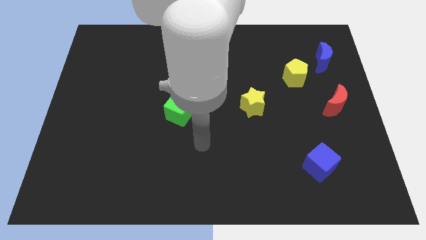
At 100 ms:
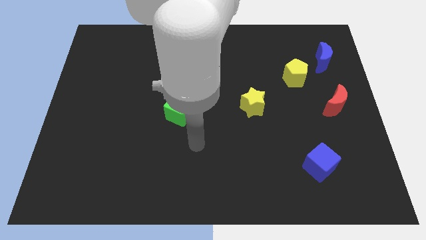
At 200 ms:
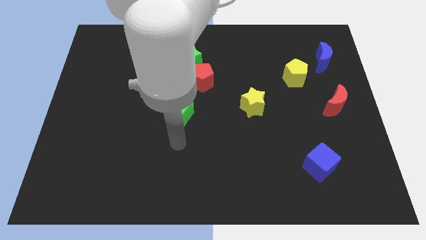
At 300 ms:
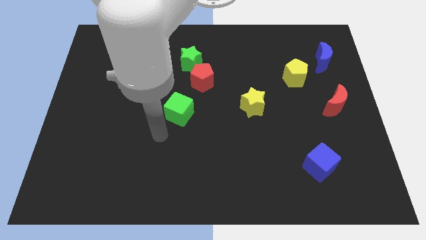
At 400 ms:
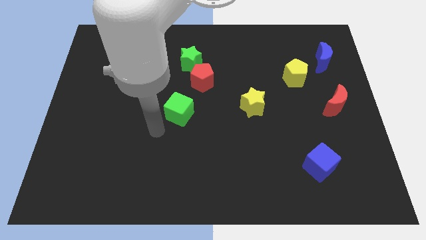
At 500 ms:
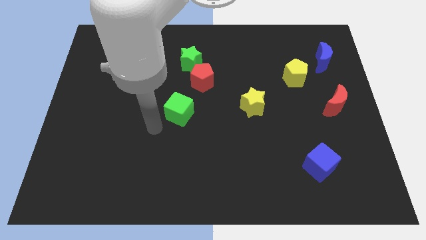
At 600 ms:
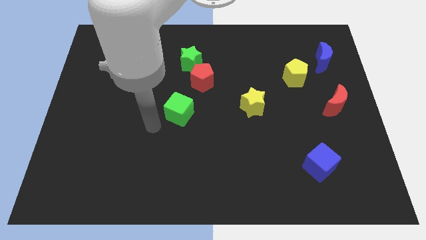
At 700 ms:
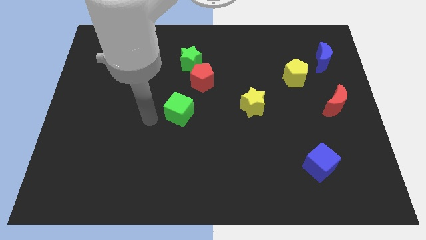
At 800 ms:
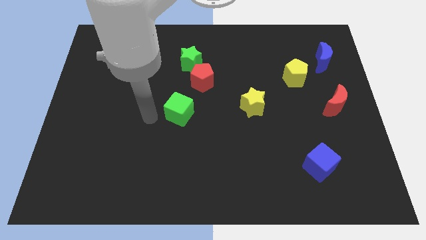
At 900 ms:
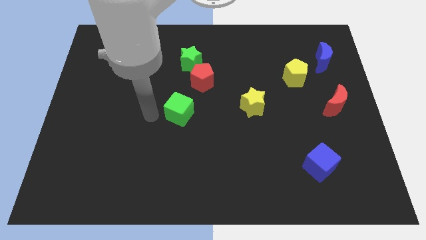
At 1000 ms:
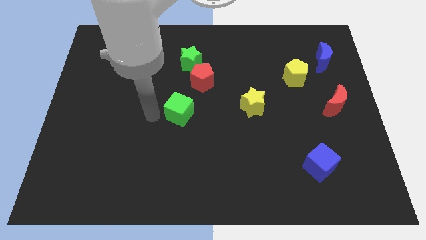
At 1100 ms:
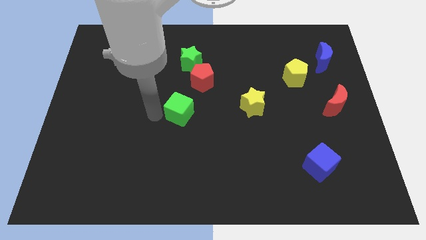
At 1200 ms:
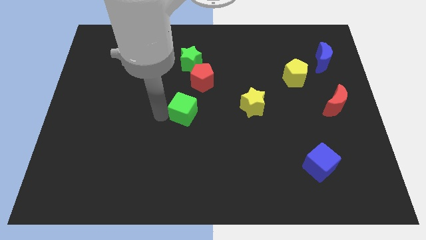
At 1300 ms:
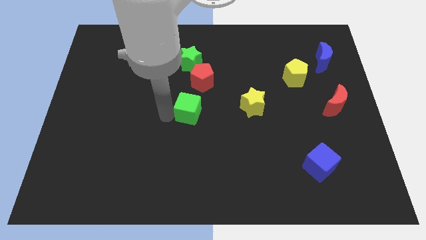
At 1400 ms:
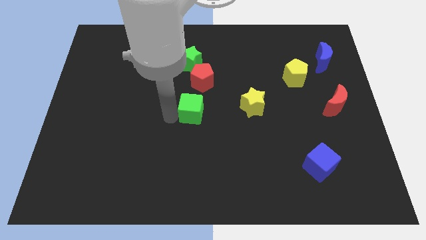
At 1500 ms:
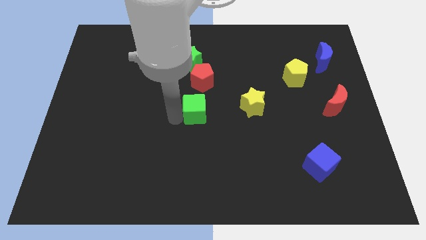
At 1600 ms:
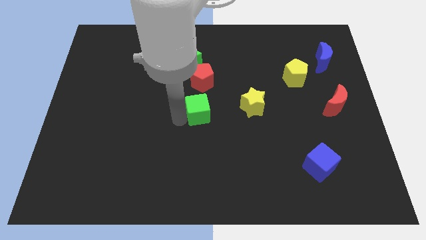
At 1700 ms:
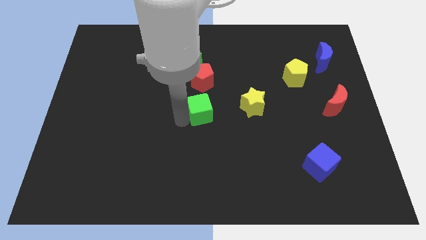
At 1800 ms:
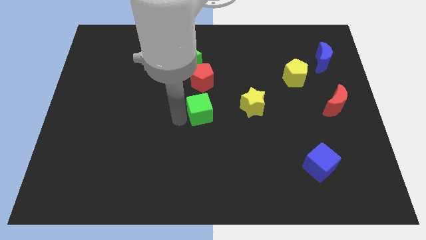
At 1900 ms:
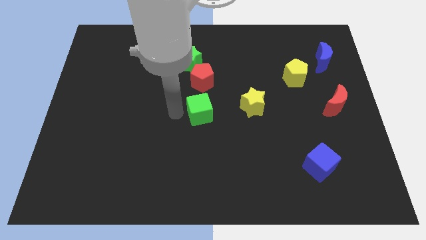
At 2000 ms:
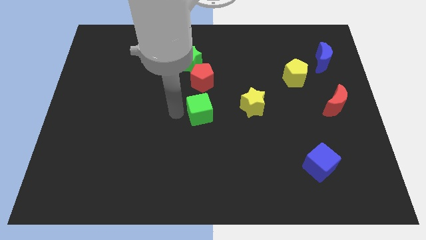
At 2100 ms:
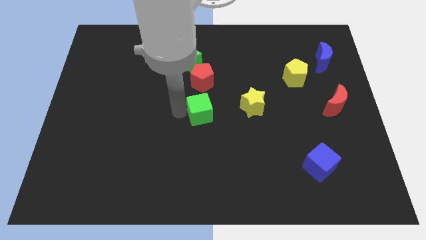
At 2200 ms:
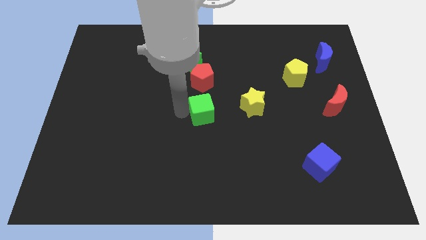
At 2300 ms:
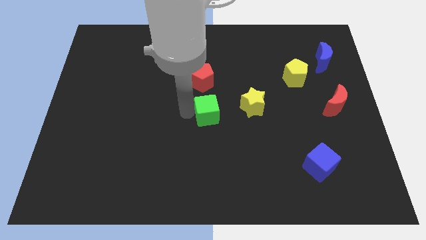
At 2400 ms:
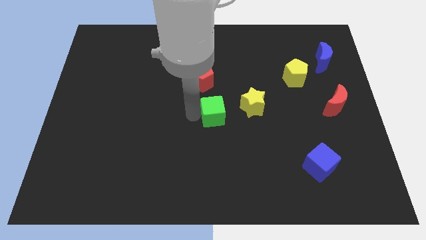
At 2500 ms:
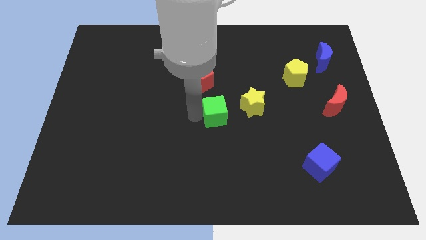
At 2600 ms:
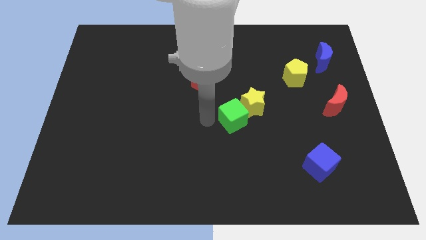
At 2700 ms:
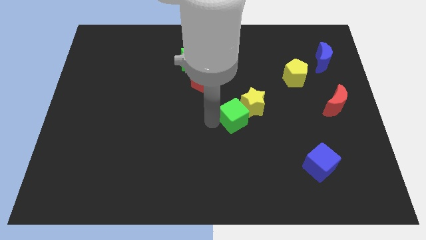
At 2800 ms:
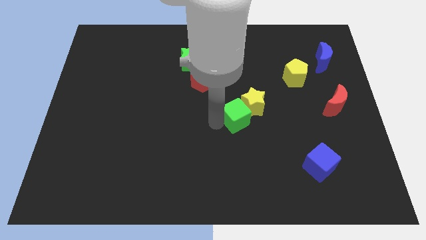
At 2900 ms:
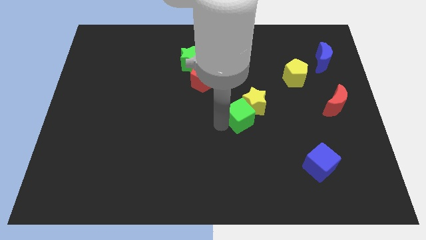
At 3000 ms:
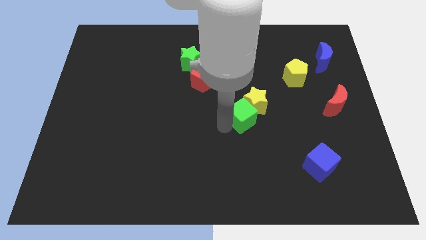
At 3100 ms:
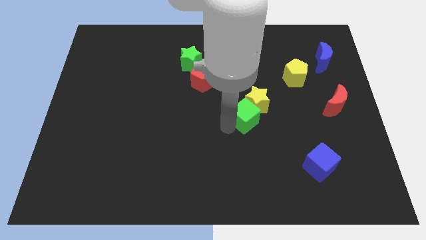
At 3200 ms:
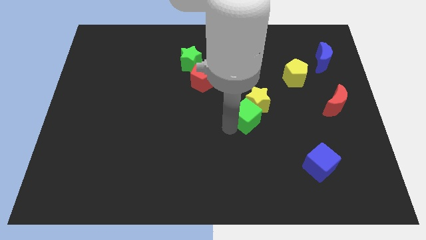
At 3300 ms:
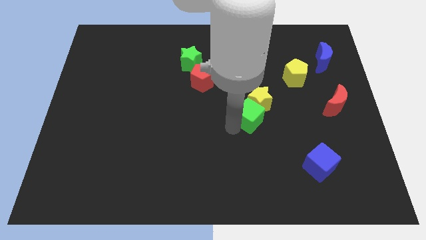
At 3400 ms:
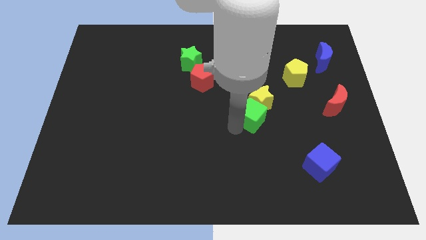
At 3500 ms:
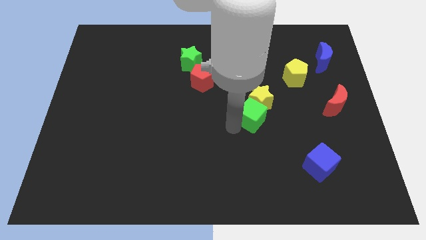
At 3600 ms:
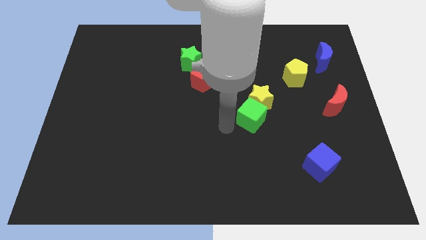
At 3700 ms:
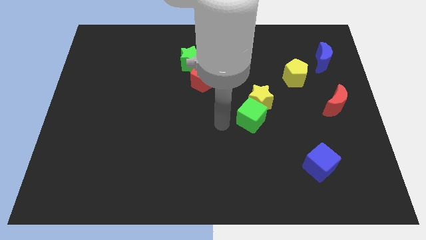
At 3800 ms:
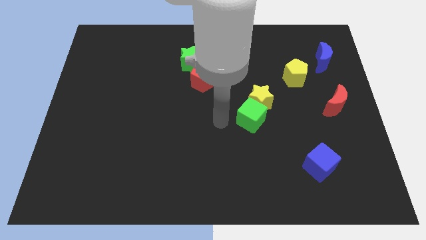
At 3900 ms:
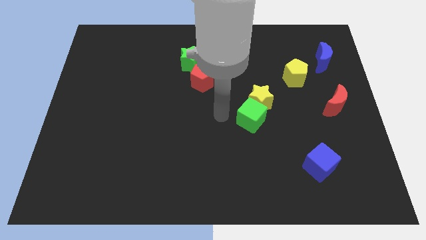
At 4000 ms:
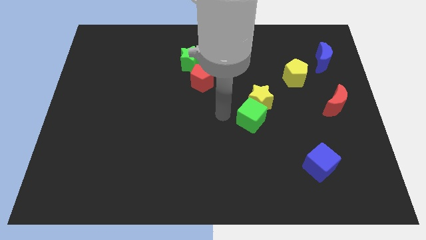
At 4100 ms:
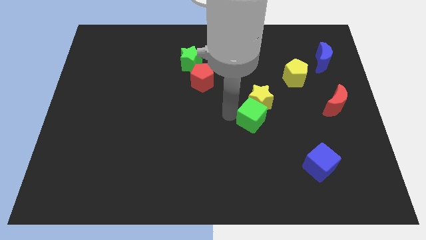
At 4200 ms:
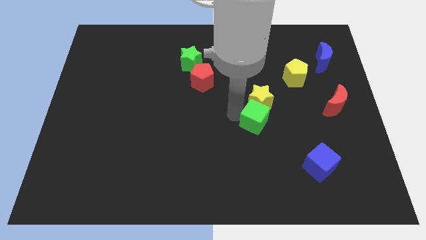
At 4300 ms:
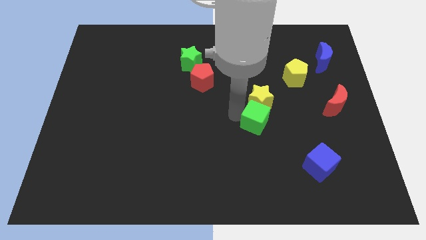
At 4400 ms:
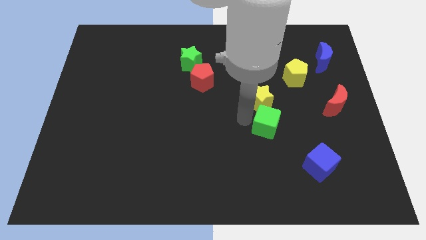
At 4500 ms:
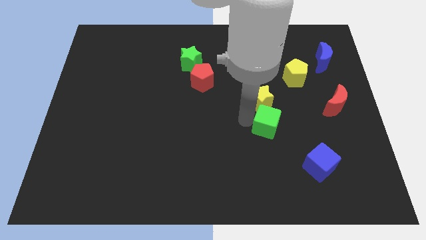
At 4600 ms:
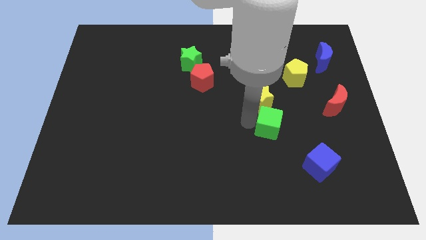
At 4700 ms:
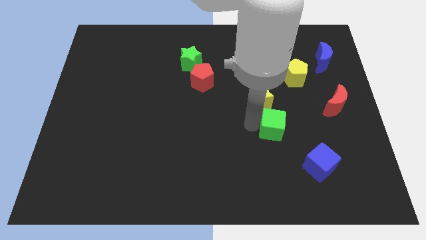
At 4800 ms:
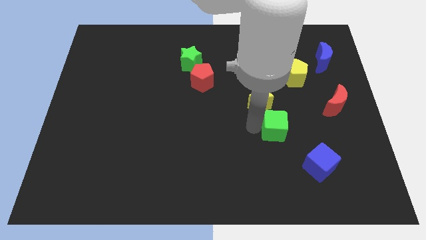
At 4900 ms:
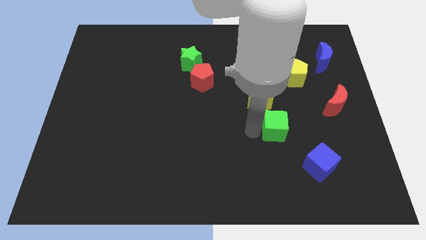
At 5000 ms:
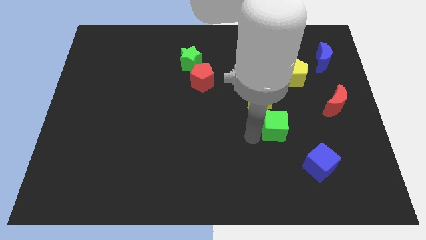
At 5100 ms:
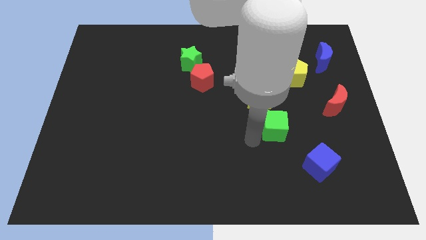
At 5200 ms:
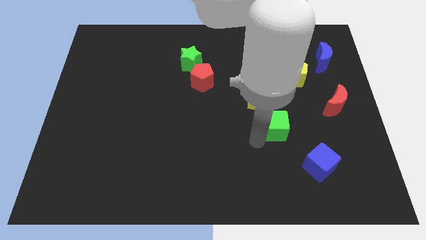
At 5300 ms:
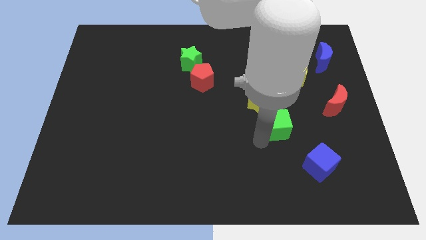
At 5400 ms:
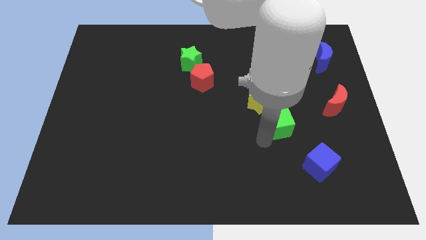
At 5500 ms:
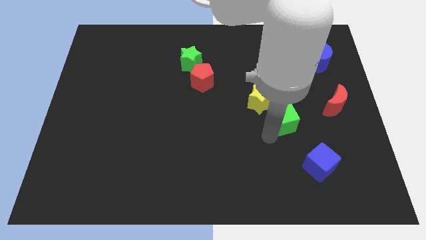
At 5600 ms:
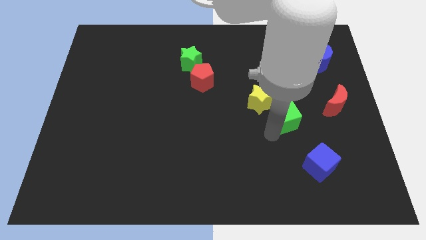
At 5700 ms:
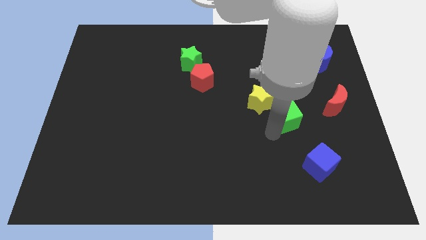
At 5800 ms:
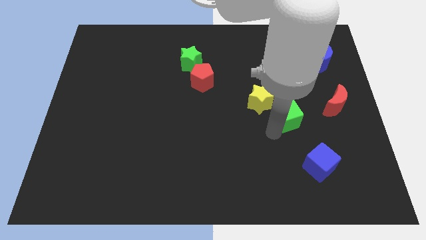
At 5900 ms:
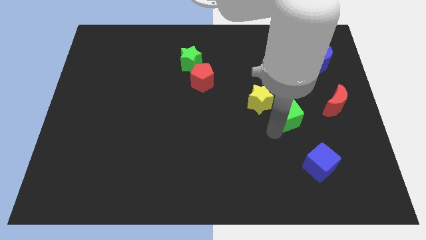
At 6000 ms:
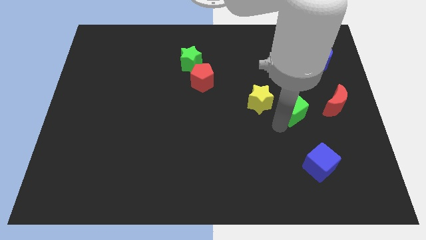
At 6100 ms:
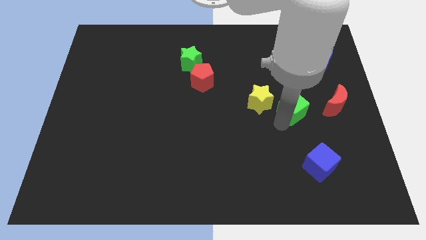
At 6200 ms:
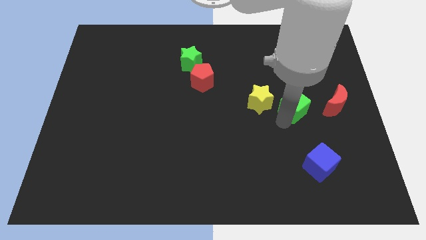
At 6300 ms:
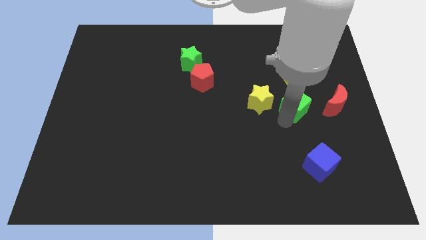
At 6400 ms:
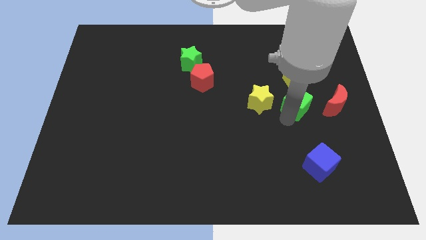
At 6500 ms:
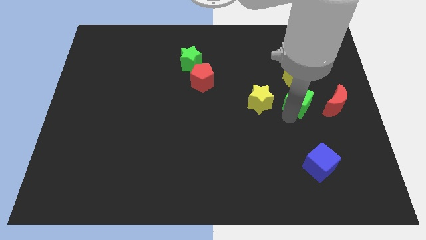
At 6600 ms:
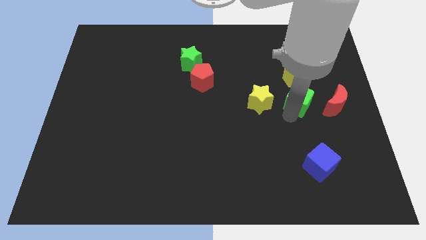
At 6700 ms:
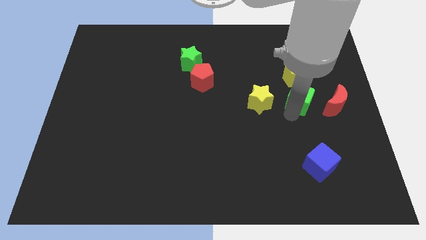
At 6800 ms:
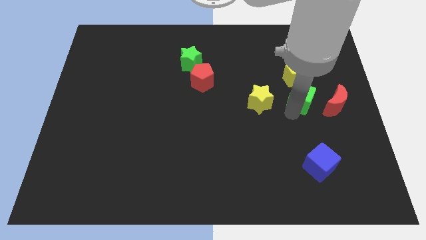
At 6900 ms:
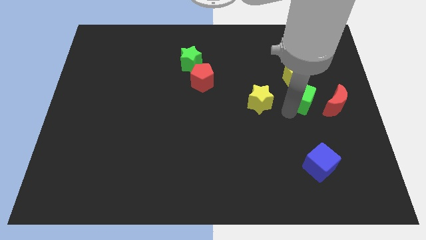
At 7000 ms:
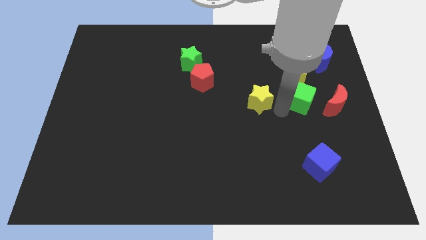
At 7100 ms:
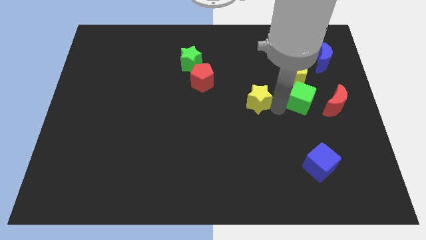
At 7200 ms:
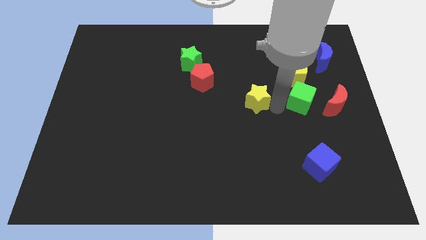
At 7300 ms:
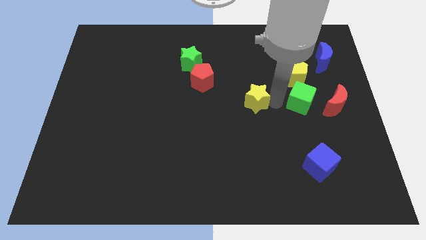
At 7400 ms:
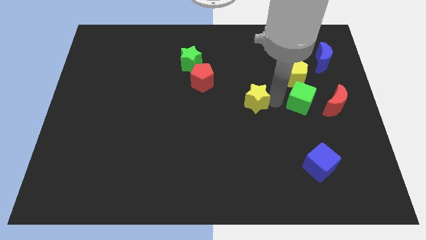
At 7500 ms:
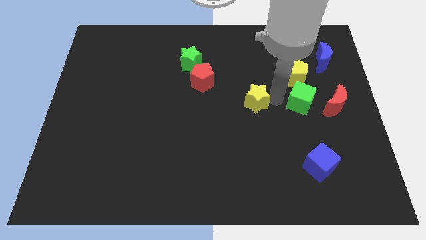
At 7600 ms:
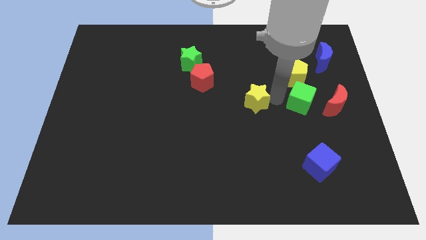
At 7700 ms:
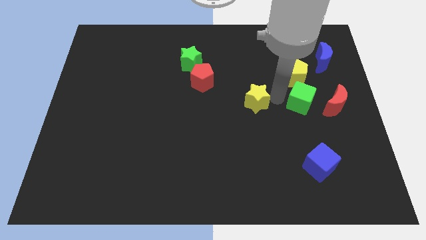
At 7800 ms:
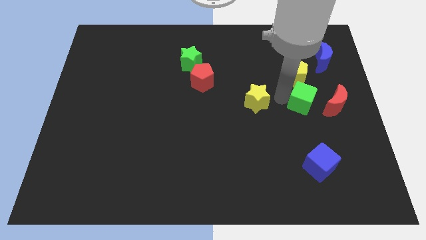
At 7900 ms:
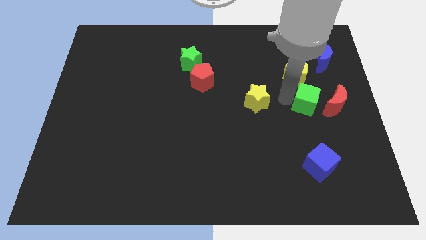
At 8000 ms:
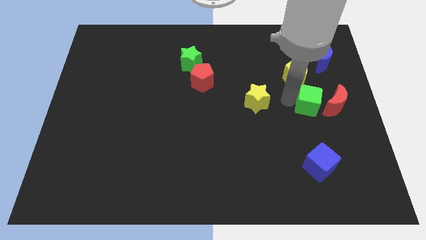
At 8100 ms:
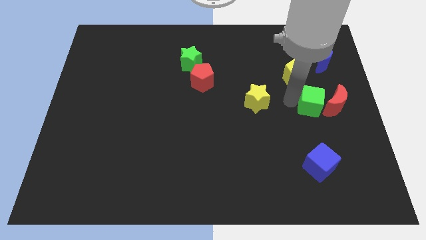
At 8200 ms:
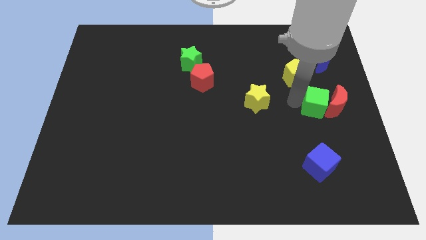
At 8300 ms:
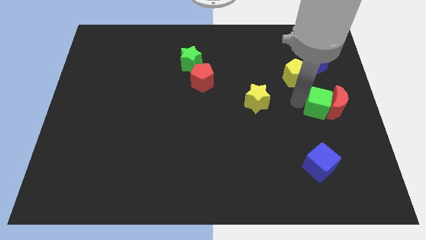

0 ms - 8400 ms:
slide the green cube next to the red moon

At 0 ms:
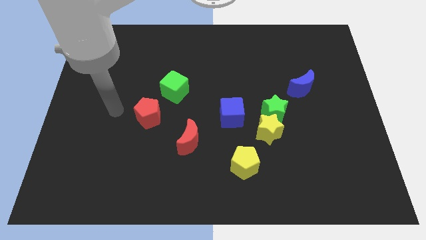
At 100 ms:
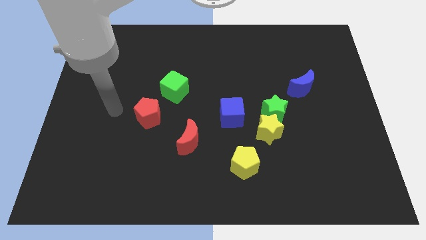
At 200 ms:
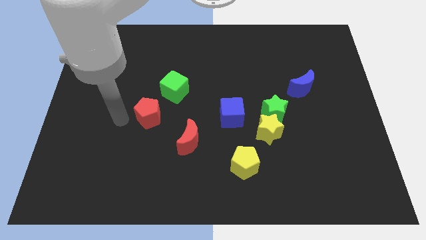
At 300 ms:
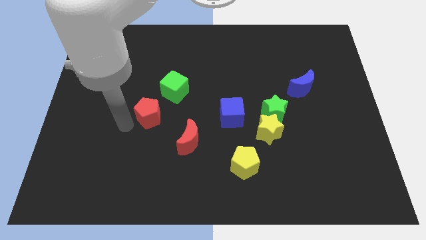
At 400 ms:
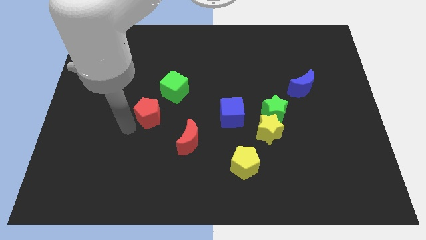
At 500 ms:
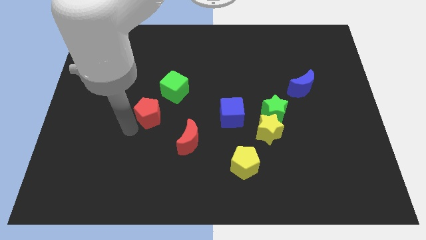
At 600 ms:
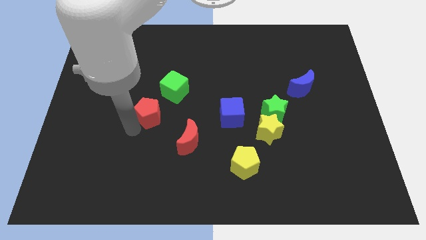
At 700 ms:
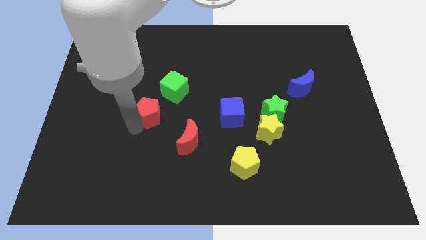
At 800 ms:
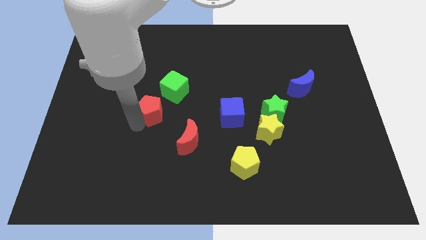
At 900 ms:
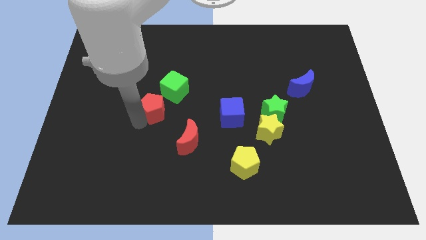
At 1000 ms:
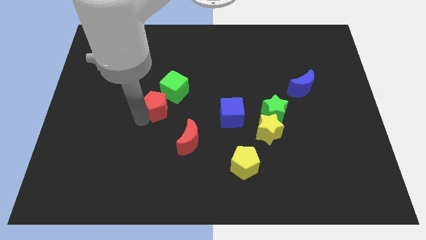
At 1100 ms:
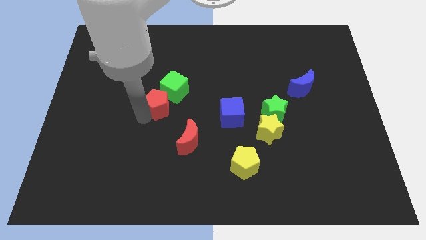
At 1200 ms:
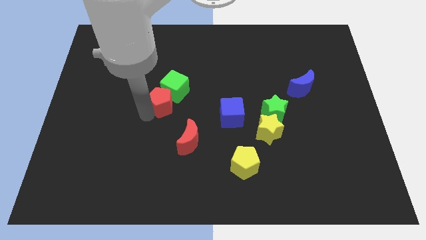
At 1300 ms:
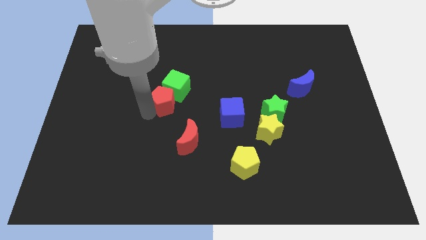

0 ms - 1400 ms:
move the red pentagon to the green cube
